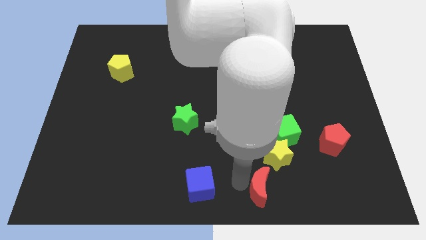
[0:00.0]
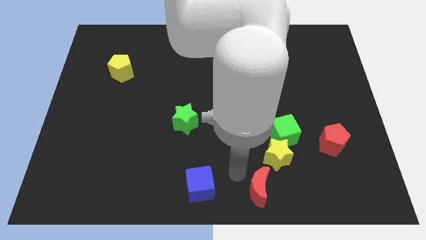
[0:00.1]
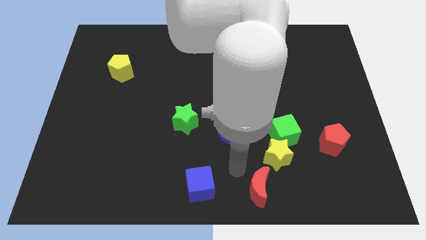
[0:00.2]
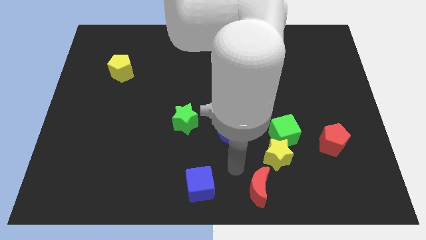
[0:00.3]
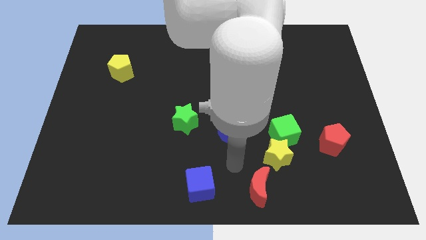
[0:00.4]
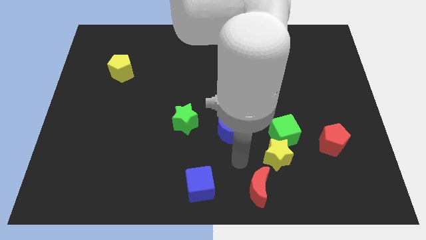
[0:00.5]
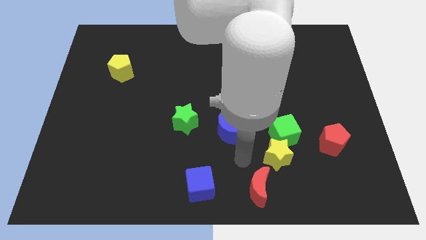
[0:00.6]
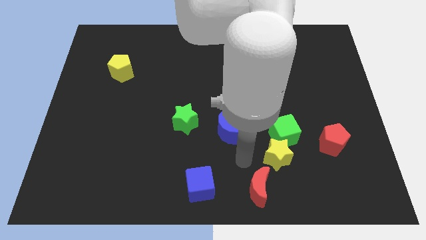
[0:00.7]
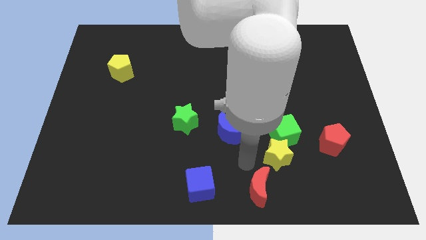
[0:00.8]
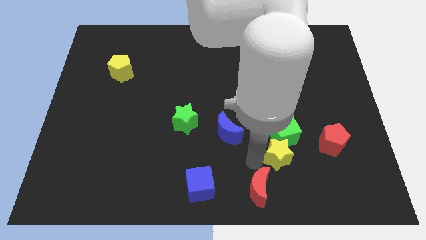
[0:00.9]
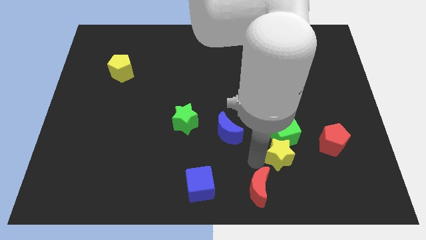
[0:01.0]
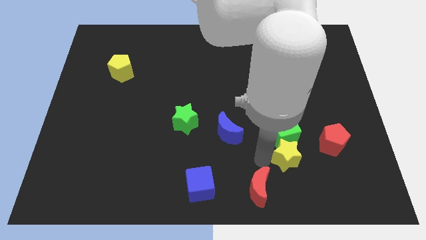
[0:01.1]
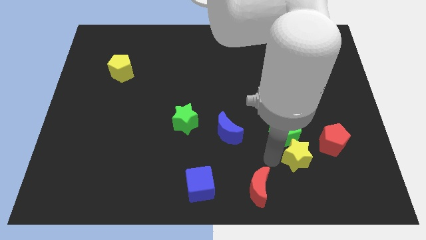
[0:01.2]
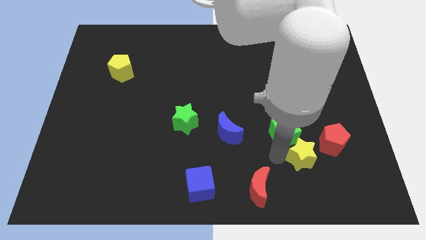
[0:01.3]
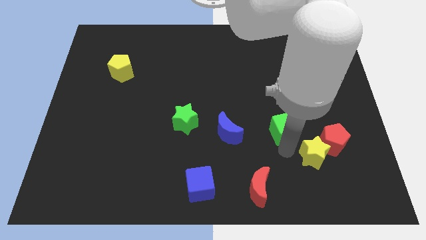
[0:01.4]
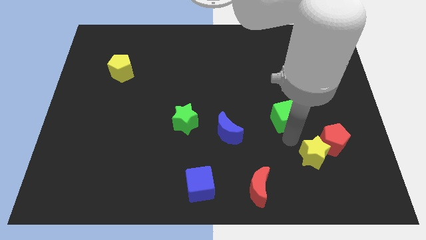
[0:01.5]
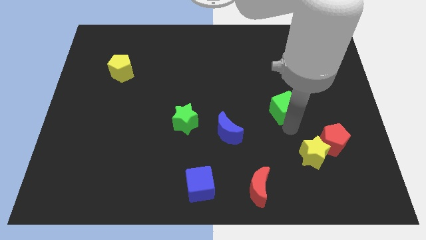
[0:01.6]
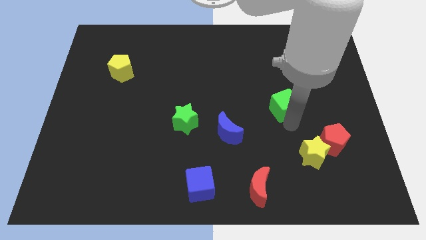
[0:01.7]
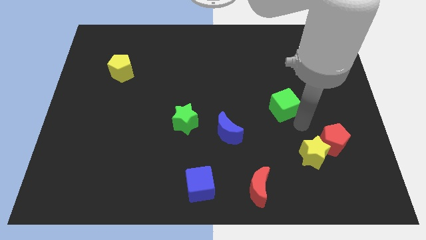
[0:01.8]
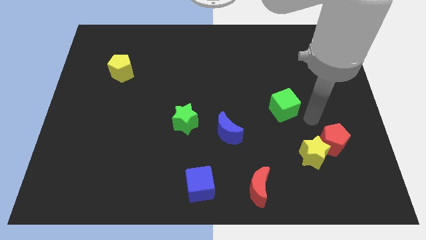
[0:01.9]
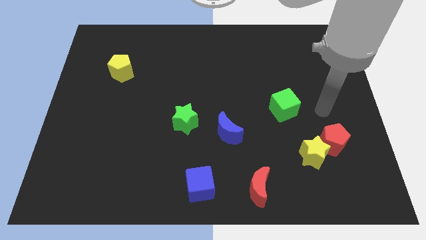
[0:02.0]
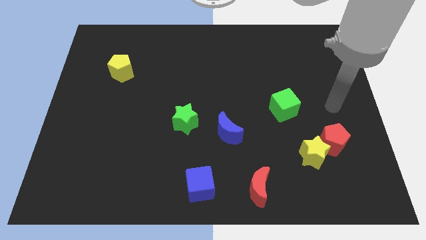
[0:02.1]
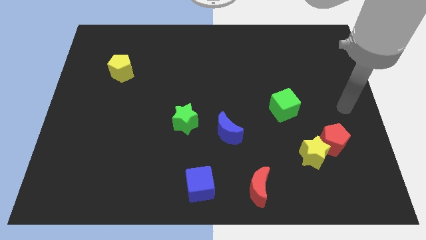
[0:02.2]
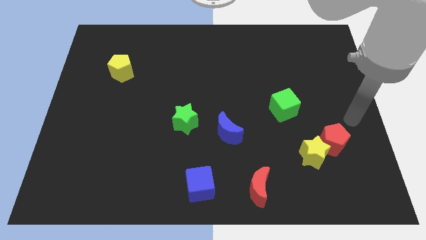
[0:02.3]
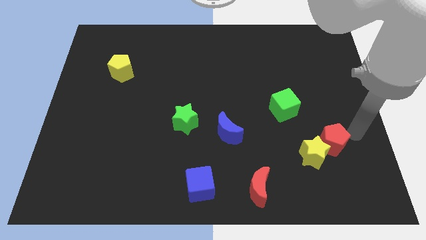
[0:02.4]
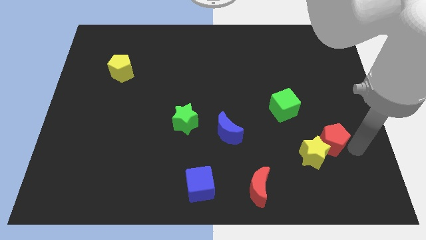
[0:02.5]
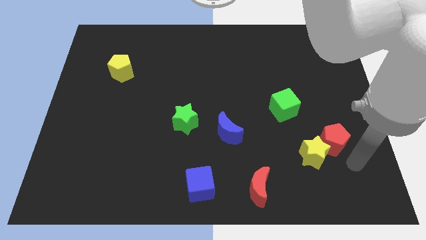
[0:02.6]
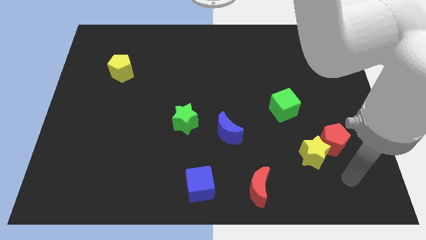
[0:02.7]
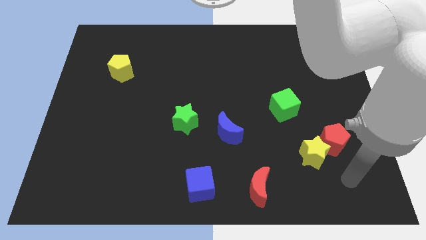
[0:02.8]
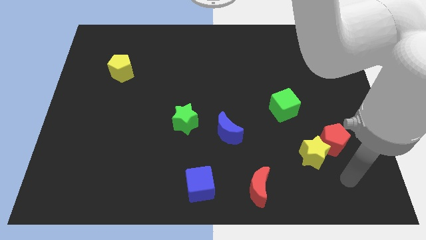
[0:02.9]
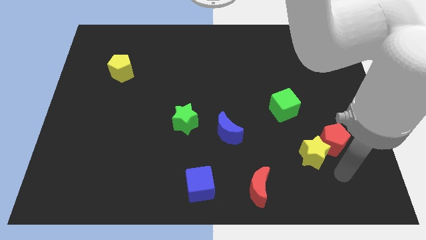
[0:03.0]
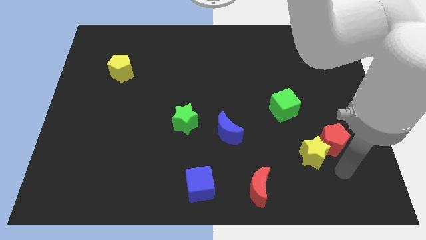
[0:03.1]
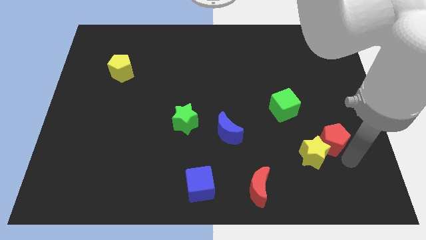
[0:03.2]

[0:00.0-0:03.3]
move yellow star near to the red pentagon

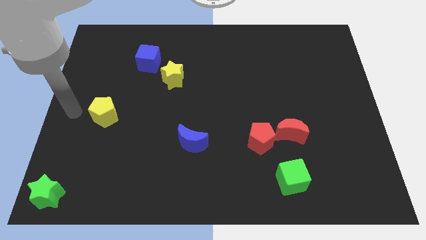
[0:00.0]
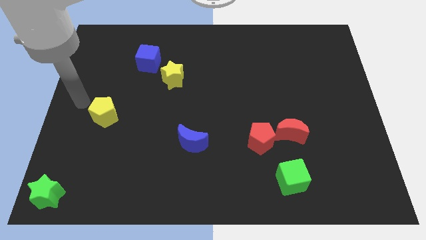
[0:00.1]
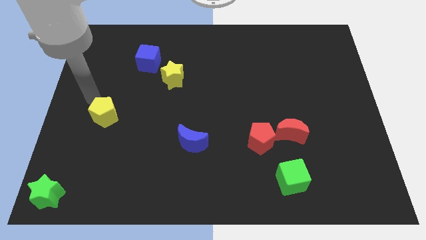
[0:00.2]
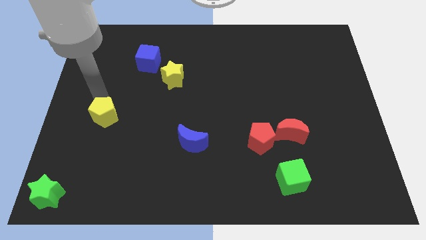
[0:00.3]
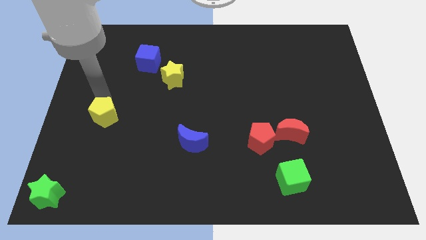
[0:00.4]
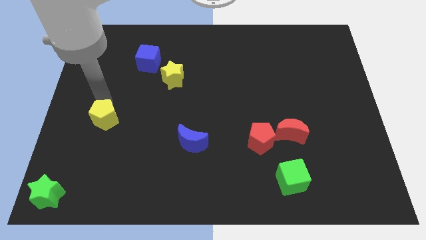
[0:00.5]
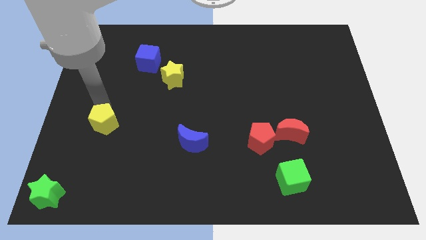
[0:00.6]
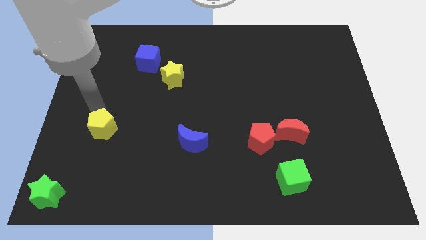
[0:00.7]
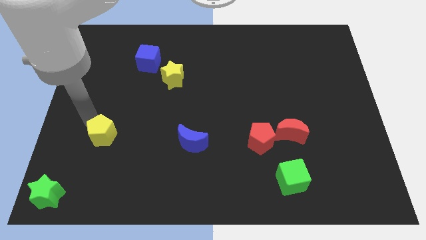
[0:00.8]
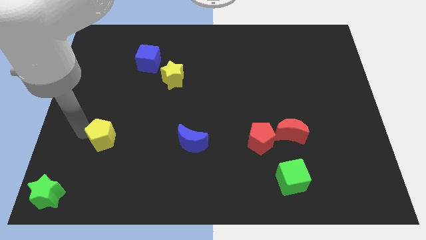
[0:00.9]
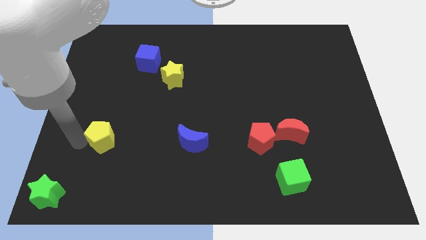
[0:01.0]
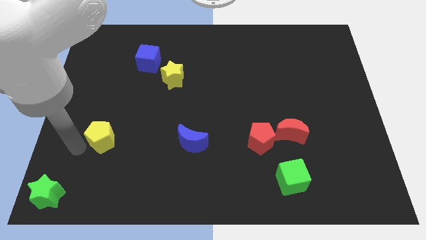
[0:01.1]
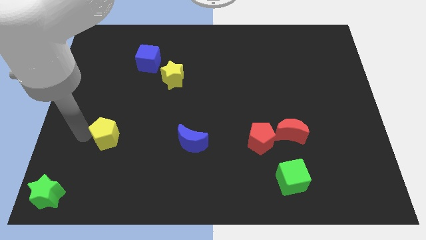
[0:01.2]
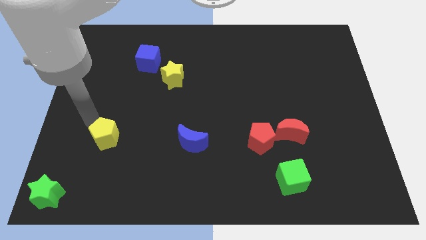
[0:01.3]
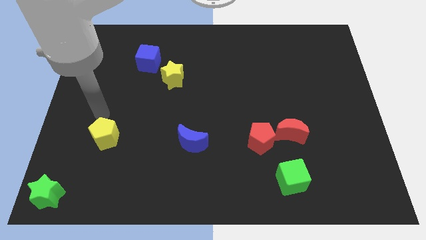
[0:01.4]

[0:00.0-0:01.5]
slide the yellow pentagon slightly downwards

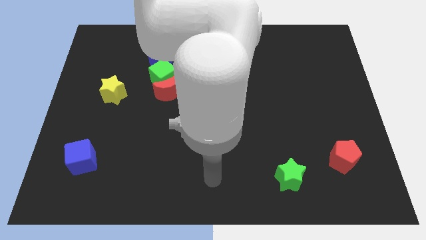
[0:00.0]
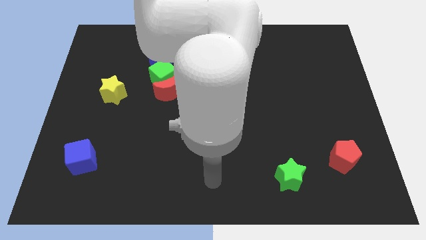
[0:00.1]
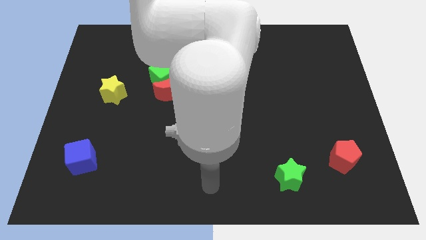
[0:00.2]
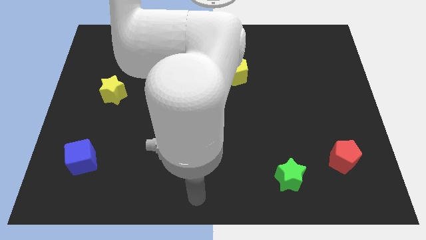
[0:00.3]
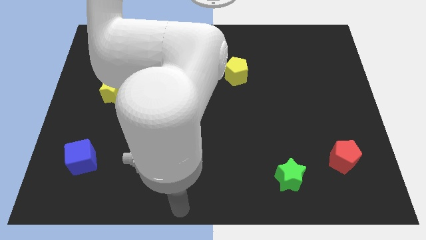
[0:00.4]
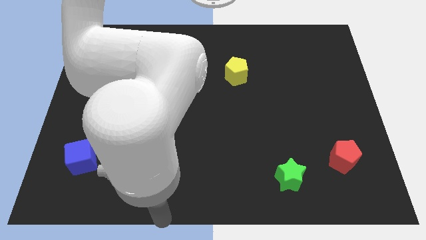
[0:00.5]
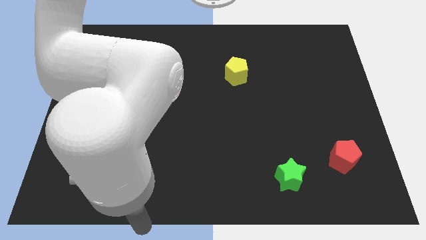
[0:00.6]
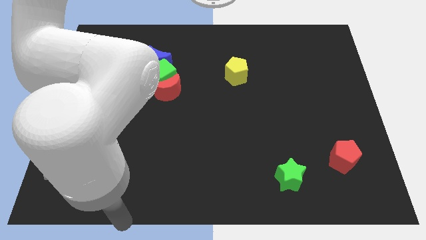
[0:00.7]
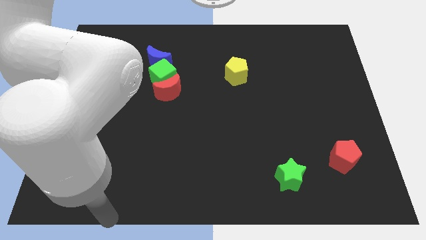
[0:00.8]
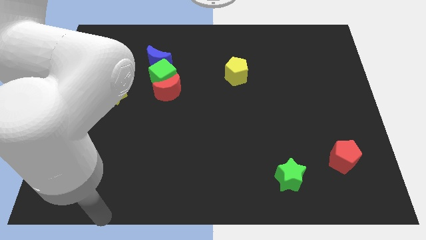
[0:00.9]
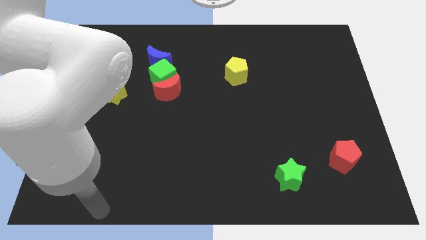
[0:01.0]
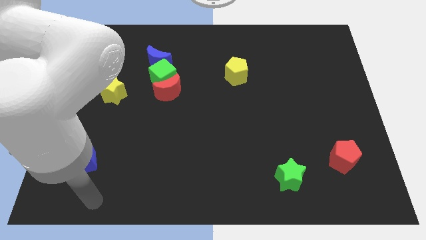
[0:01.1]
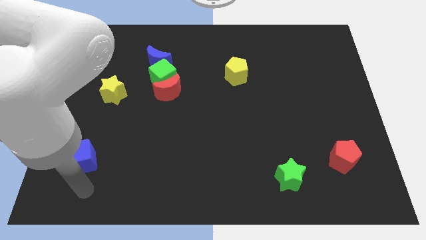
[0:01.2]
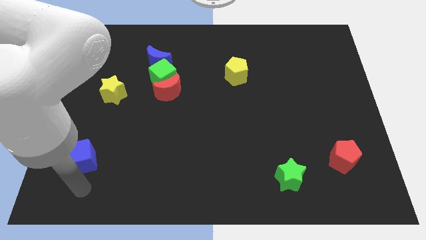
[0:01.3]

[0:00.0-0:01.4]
point your arm below the blue cube

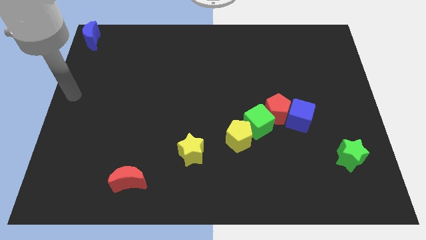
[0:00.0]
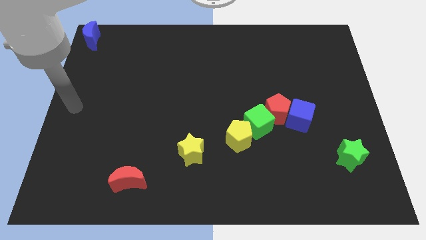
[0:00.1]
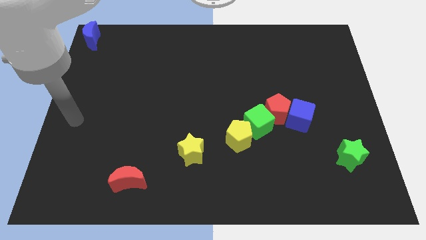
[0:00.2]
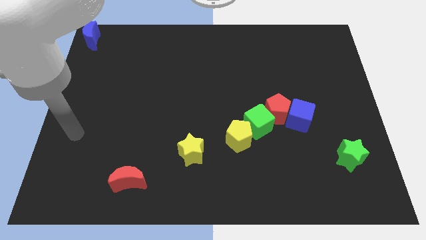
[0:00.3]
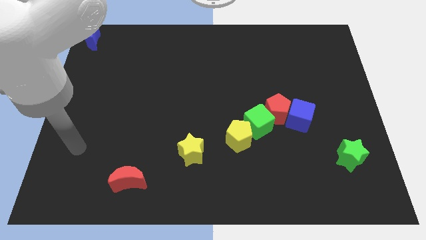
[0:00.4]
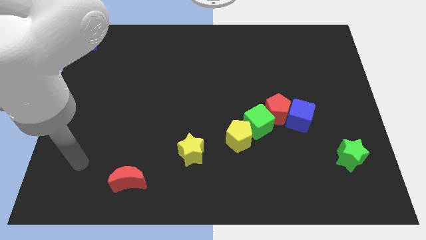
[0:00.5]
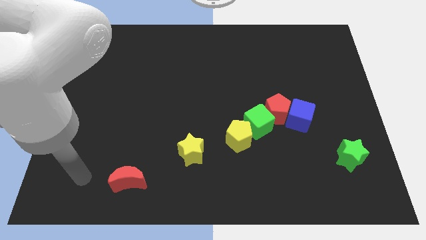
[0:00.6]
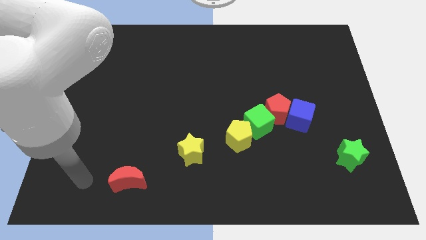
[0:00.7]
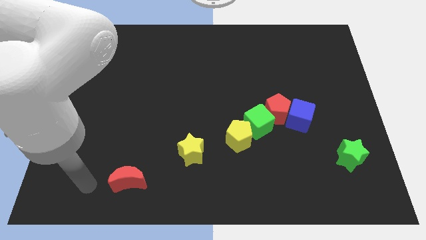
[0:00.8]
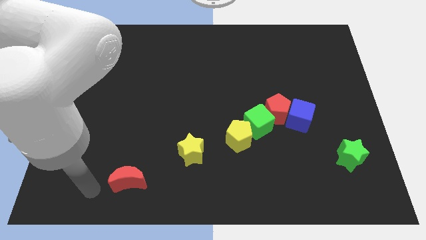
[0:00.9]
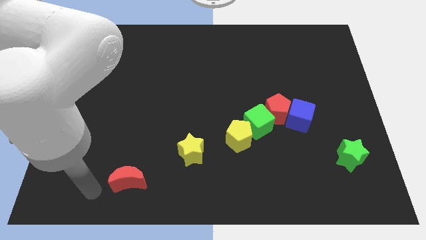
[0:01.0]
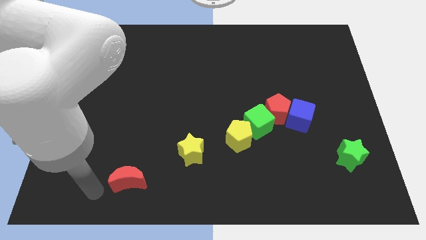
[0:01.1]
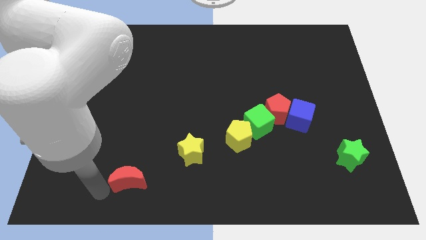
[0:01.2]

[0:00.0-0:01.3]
touch the left side of the red crescent

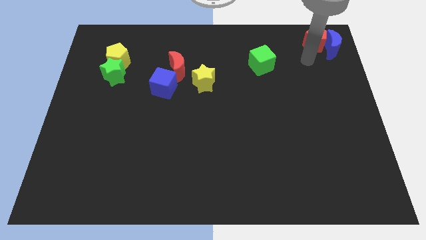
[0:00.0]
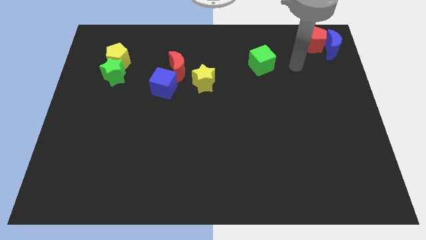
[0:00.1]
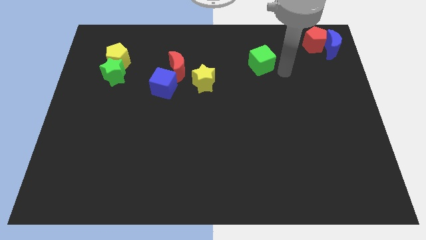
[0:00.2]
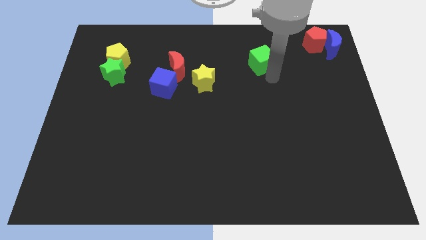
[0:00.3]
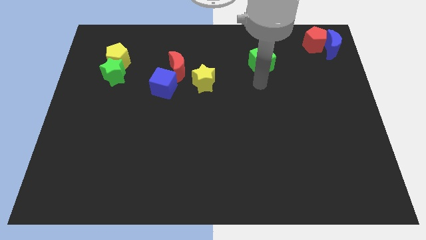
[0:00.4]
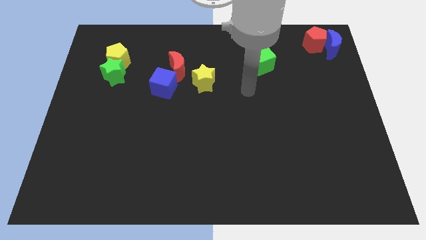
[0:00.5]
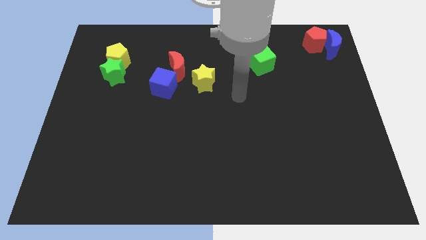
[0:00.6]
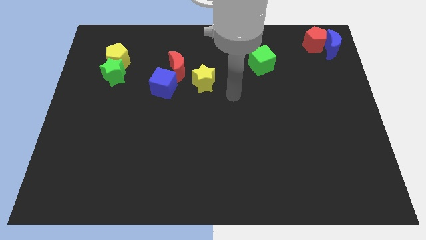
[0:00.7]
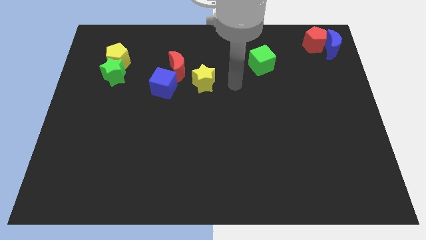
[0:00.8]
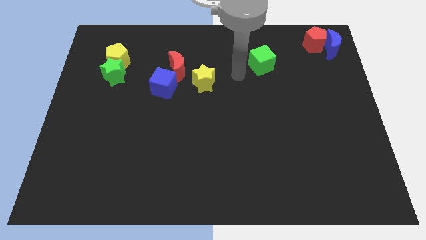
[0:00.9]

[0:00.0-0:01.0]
move your arm in between yellow and green block

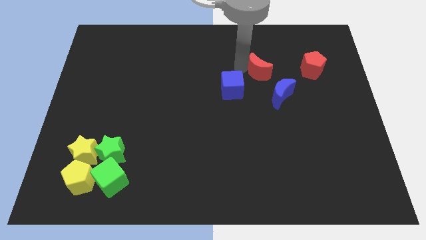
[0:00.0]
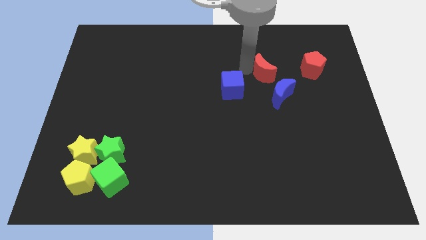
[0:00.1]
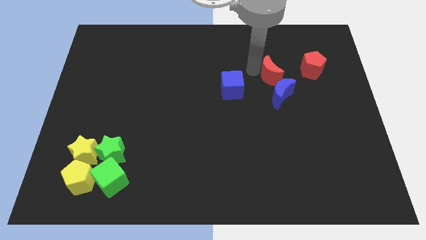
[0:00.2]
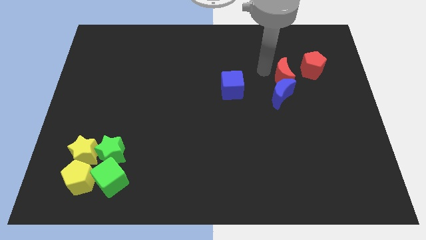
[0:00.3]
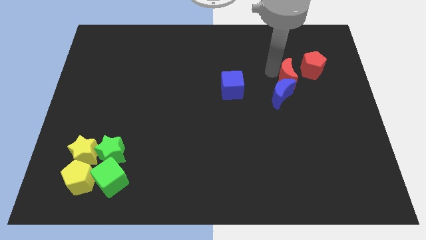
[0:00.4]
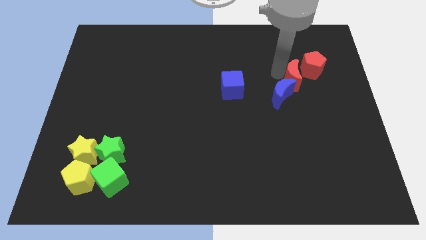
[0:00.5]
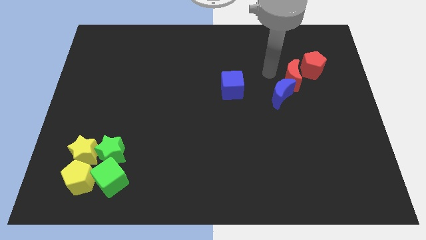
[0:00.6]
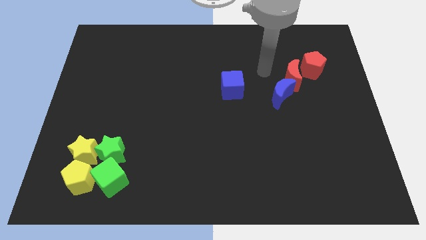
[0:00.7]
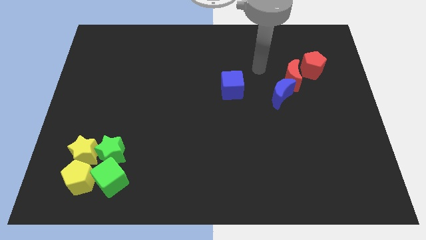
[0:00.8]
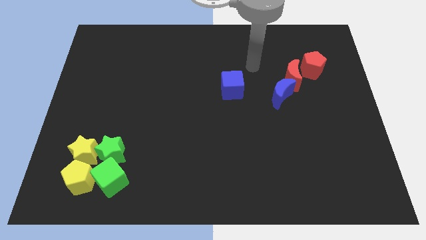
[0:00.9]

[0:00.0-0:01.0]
move the red moon close to the red pentagon
